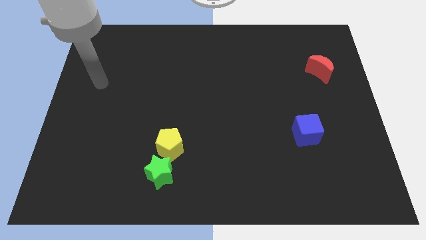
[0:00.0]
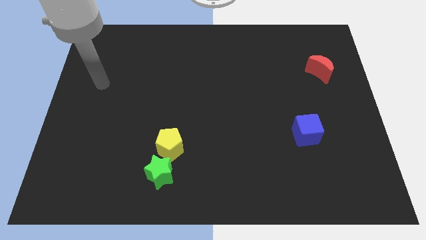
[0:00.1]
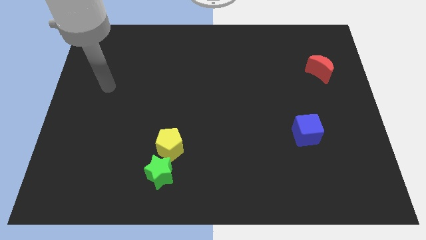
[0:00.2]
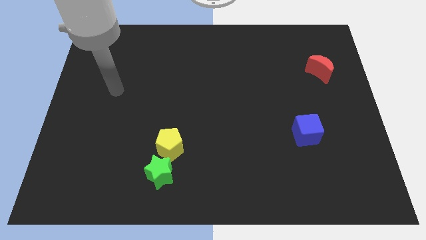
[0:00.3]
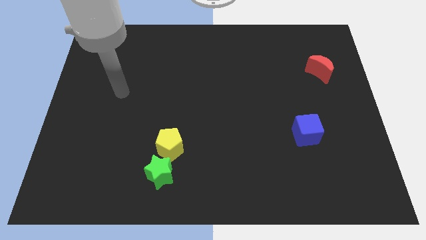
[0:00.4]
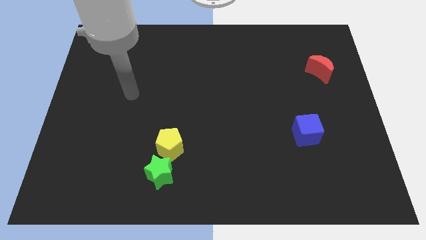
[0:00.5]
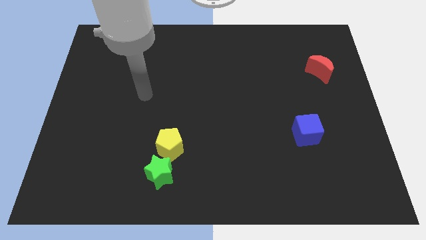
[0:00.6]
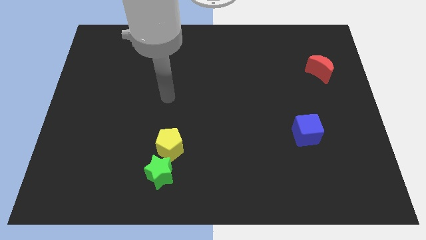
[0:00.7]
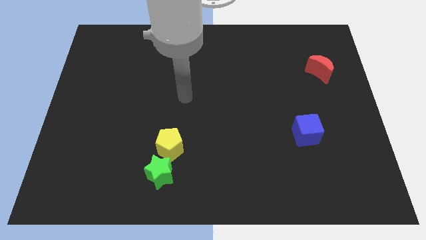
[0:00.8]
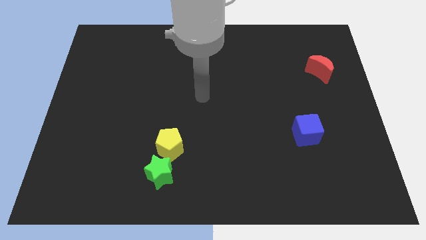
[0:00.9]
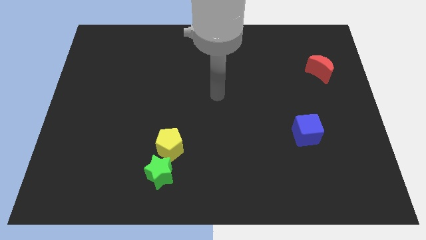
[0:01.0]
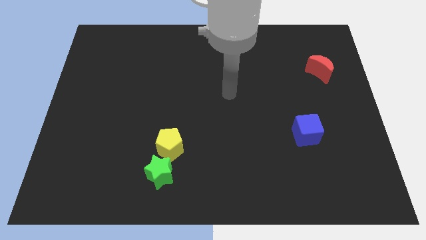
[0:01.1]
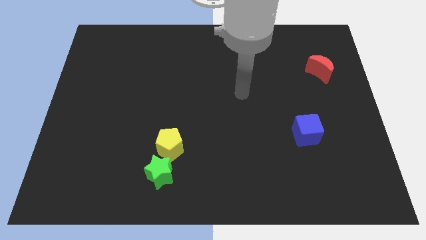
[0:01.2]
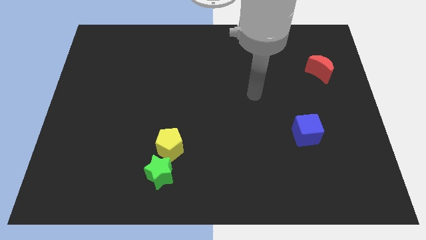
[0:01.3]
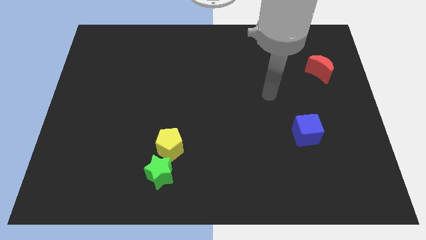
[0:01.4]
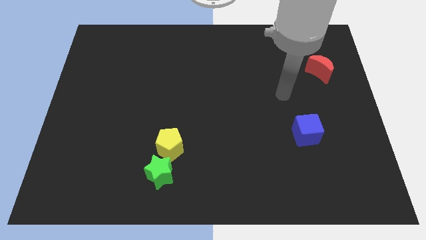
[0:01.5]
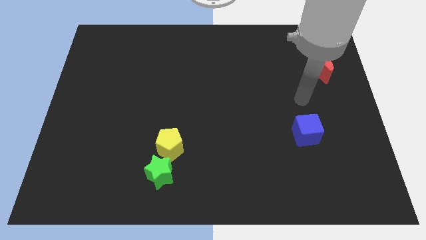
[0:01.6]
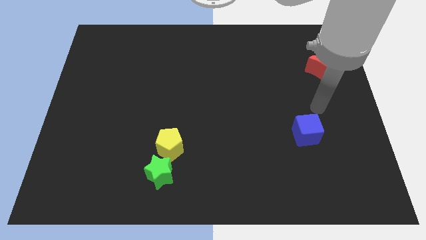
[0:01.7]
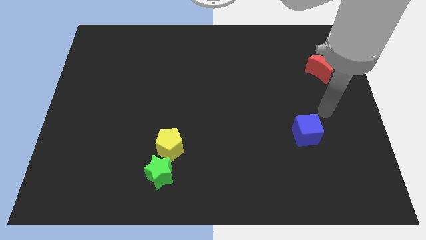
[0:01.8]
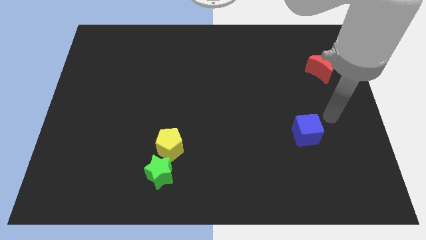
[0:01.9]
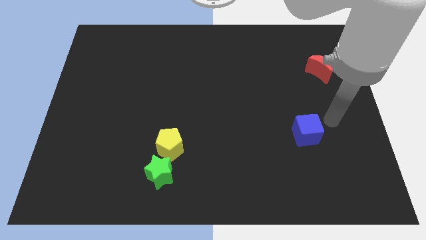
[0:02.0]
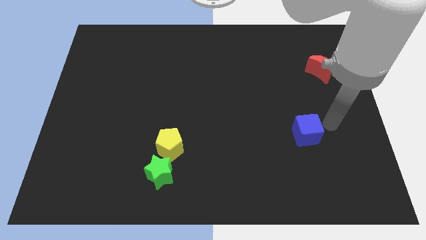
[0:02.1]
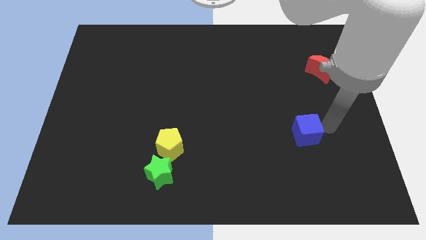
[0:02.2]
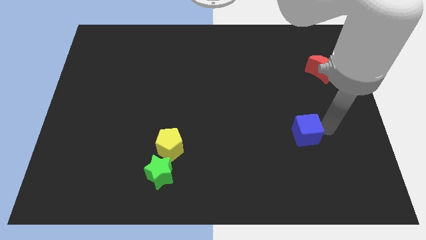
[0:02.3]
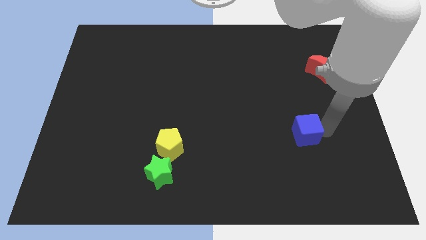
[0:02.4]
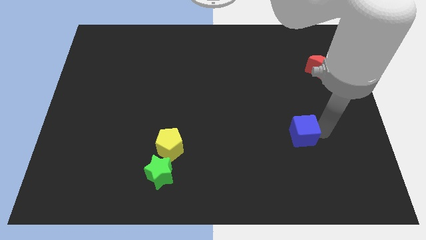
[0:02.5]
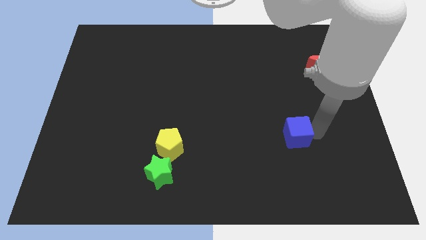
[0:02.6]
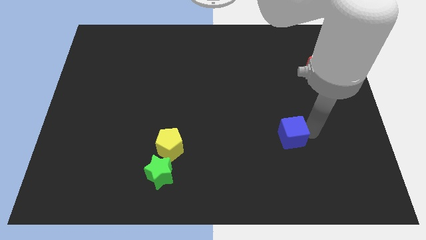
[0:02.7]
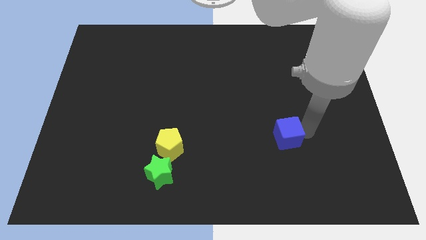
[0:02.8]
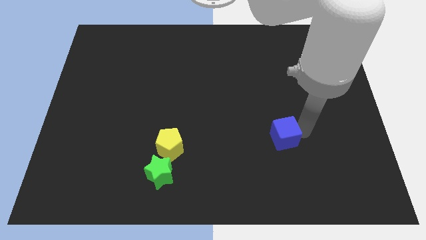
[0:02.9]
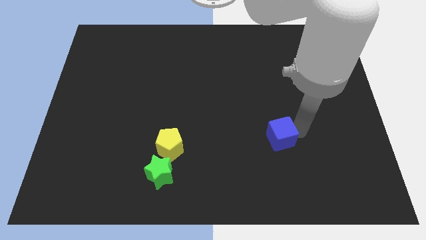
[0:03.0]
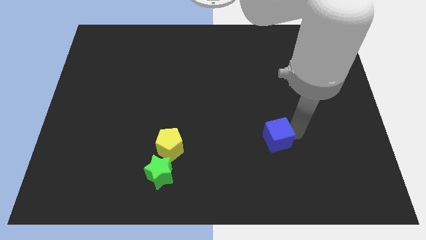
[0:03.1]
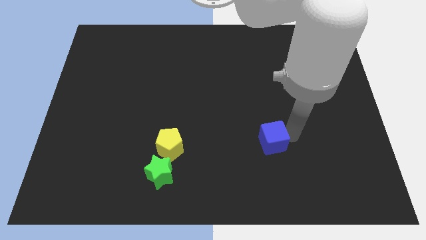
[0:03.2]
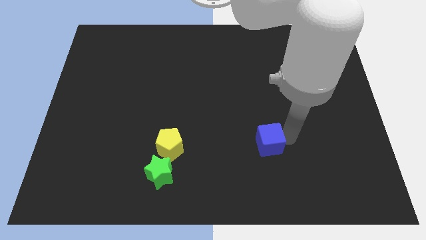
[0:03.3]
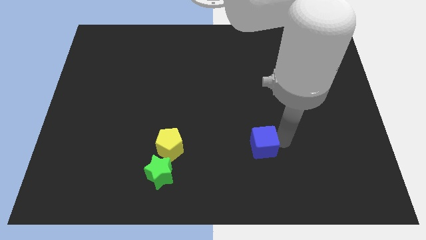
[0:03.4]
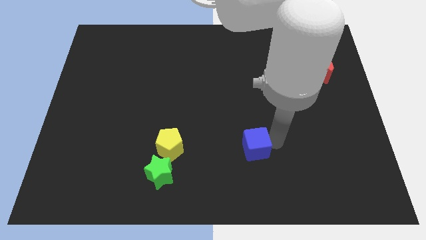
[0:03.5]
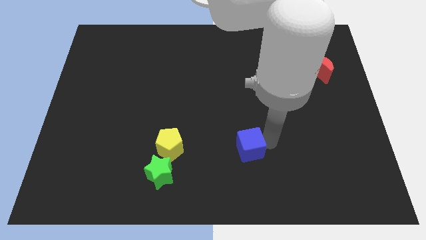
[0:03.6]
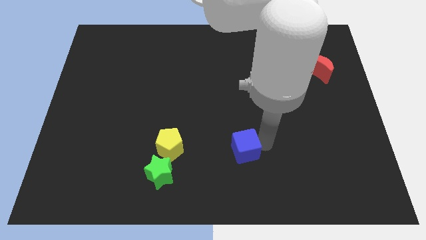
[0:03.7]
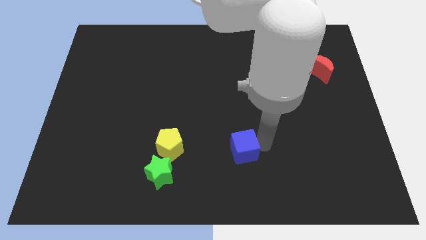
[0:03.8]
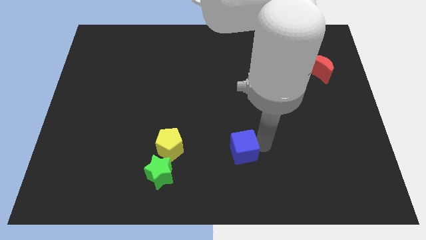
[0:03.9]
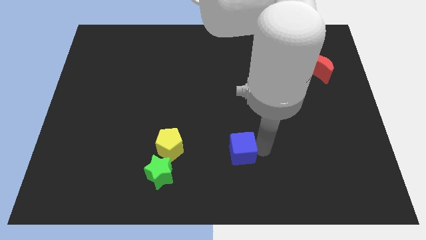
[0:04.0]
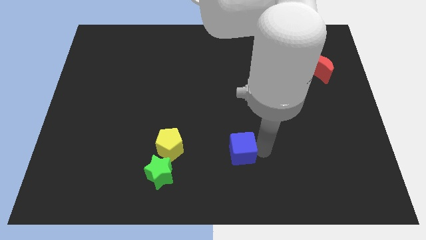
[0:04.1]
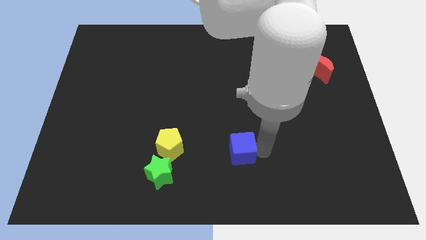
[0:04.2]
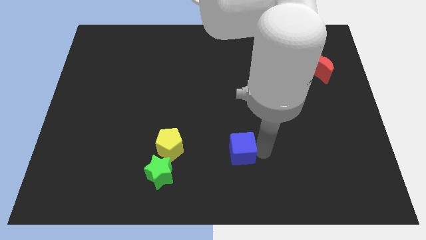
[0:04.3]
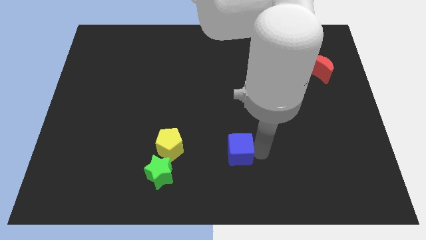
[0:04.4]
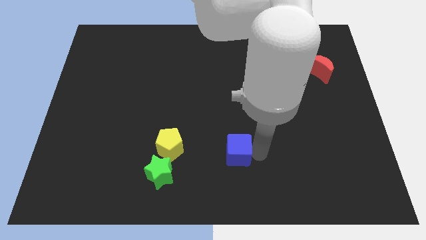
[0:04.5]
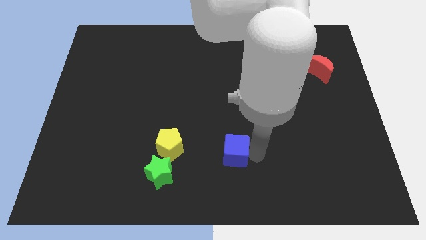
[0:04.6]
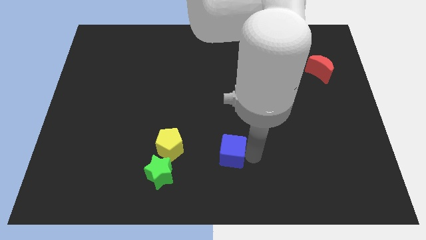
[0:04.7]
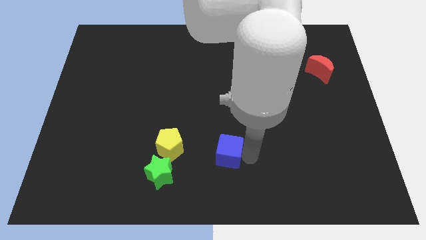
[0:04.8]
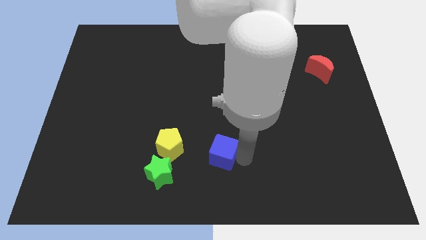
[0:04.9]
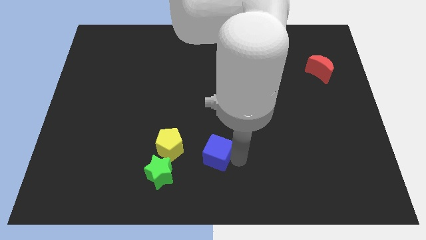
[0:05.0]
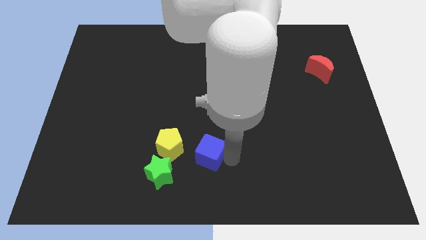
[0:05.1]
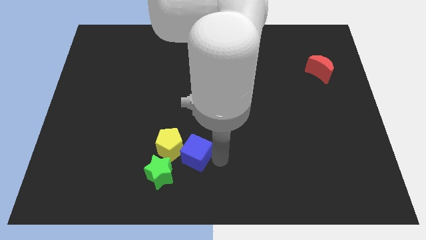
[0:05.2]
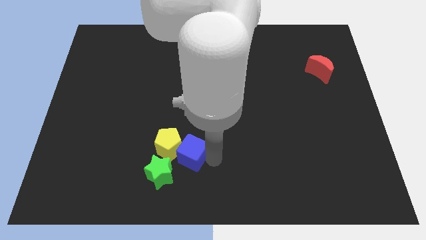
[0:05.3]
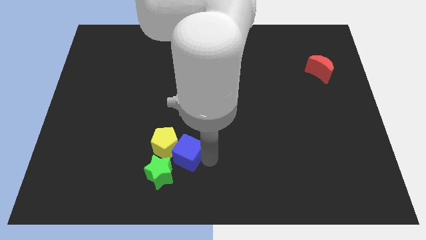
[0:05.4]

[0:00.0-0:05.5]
move the blue cube to the yellow block

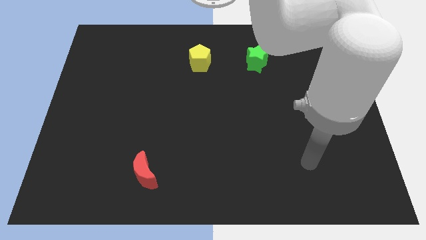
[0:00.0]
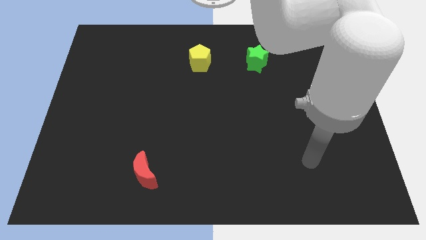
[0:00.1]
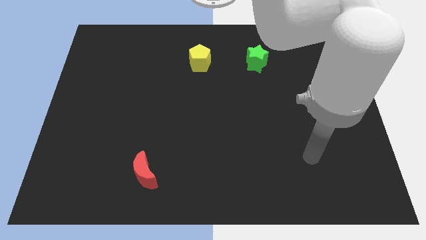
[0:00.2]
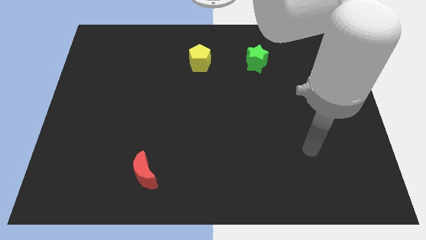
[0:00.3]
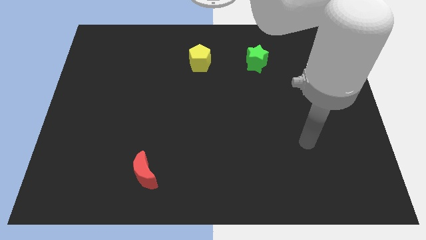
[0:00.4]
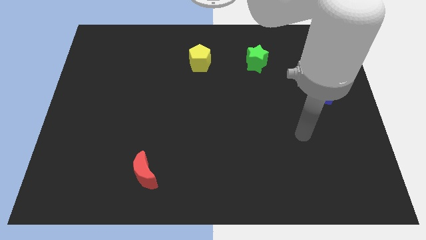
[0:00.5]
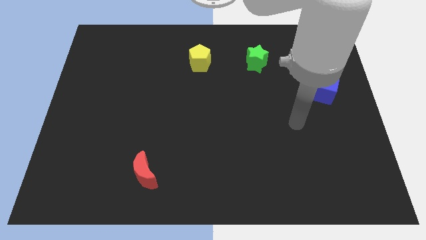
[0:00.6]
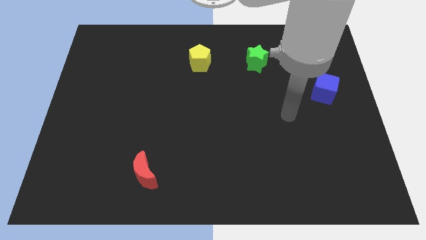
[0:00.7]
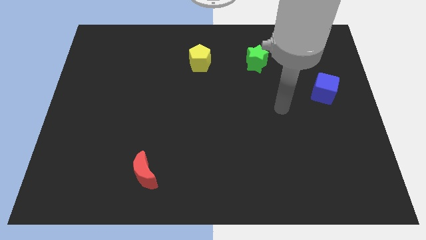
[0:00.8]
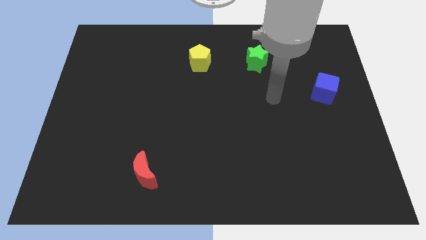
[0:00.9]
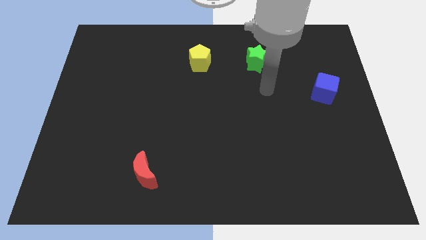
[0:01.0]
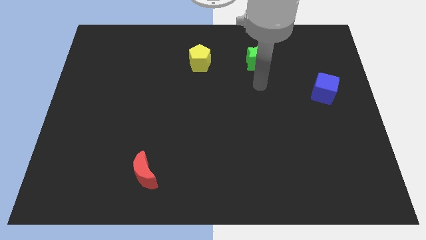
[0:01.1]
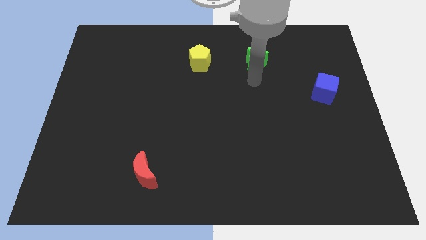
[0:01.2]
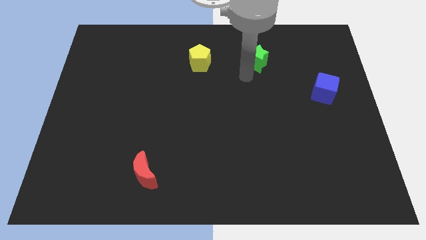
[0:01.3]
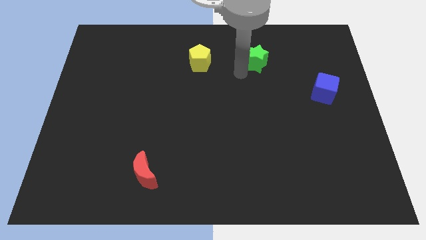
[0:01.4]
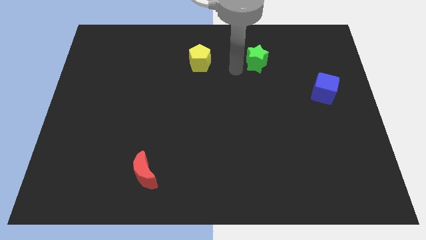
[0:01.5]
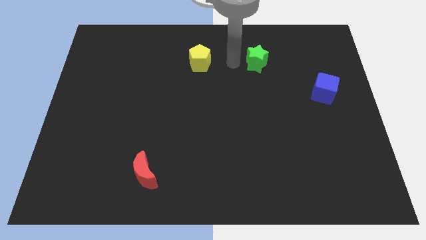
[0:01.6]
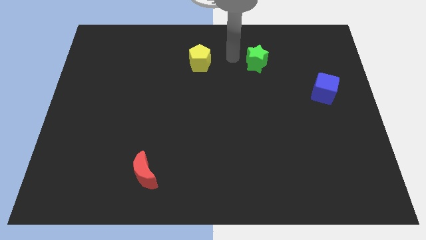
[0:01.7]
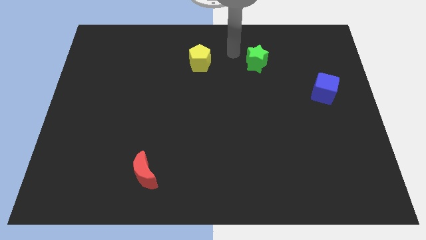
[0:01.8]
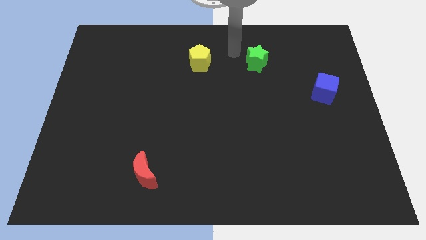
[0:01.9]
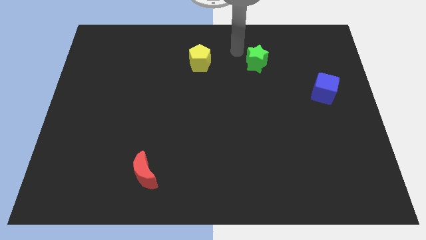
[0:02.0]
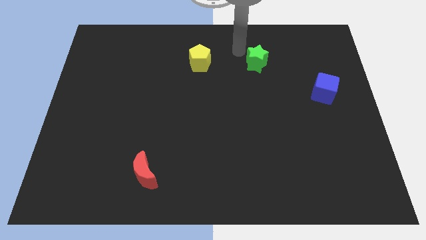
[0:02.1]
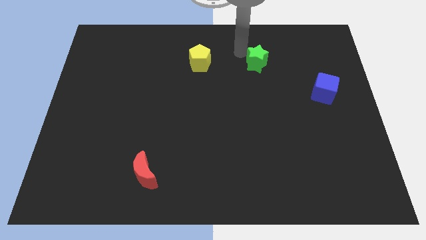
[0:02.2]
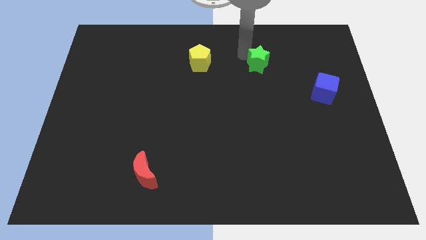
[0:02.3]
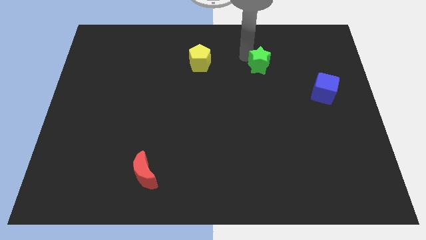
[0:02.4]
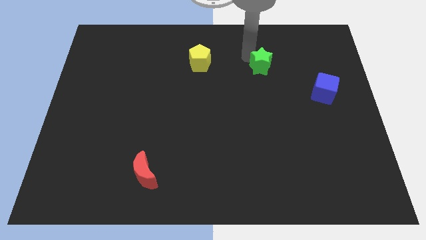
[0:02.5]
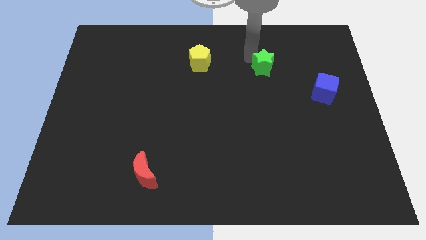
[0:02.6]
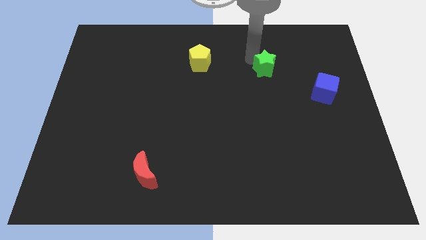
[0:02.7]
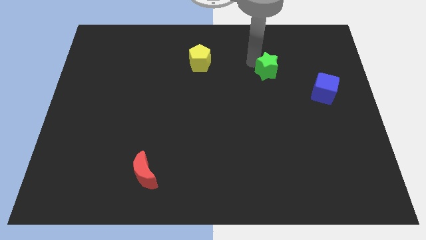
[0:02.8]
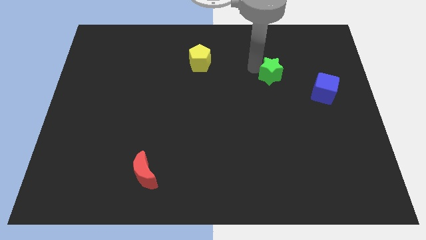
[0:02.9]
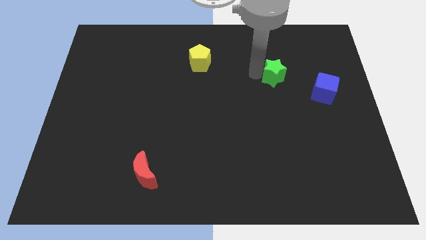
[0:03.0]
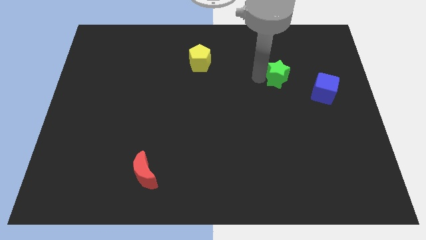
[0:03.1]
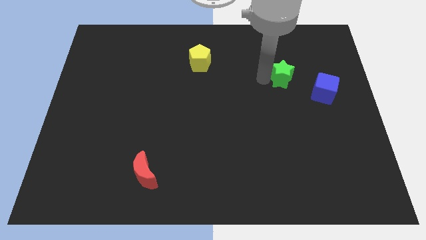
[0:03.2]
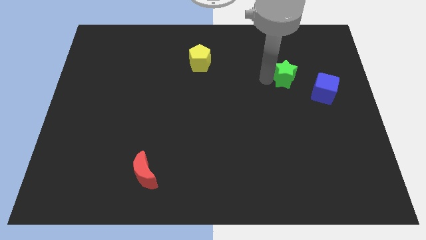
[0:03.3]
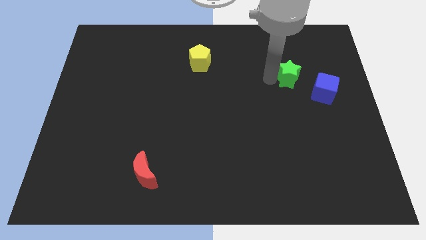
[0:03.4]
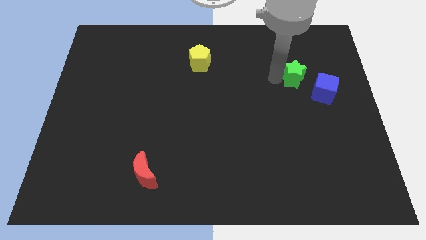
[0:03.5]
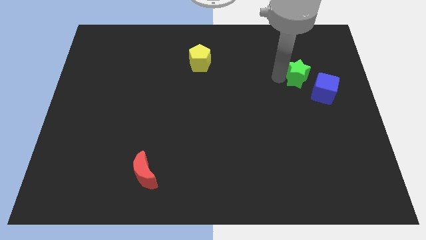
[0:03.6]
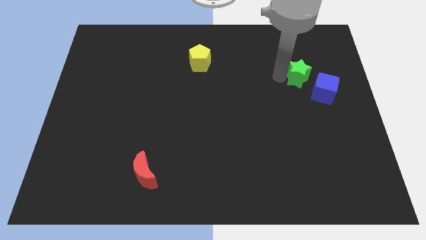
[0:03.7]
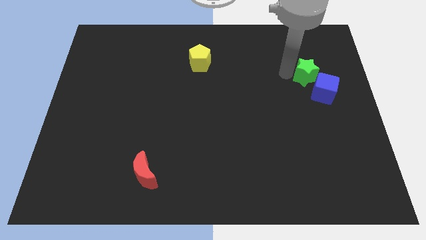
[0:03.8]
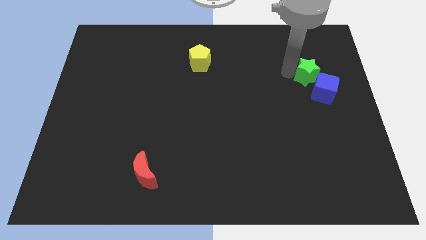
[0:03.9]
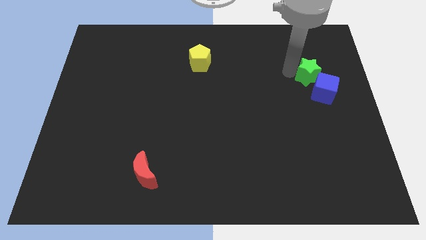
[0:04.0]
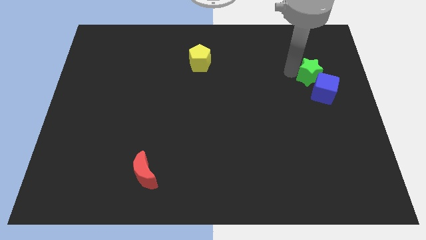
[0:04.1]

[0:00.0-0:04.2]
move the green block towards the blue block
